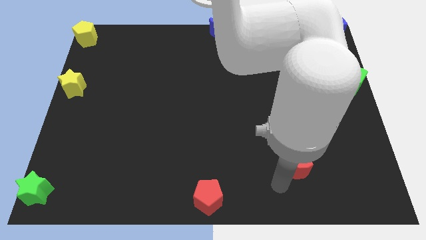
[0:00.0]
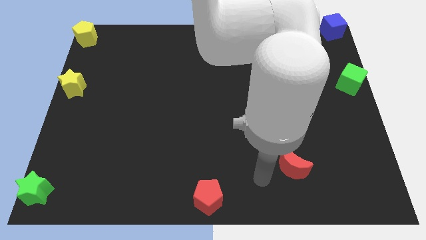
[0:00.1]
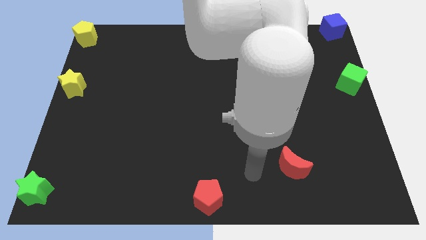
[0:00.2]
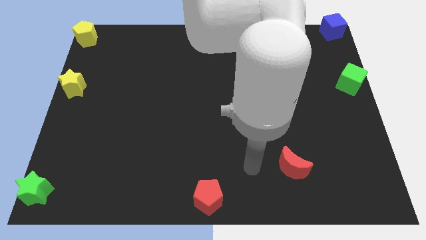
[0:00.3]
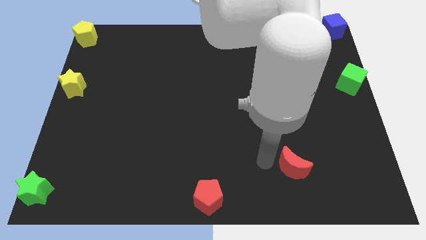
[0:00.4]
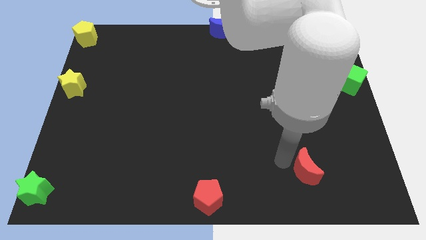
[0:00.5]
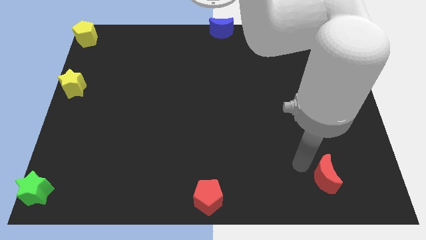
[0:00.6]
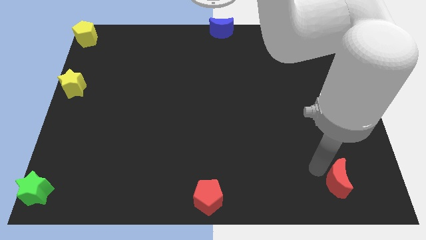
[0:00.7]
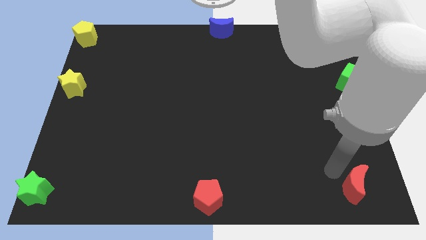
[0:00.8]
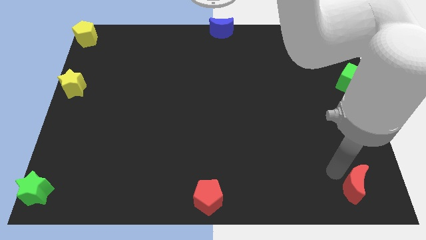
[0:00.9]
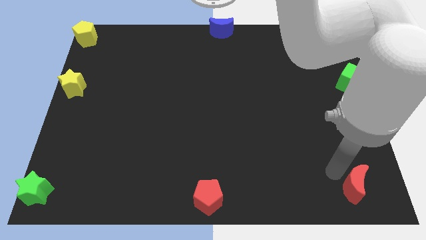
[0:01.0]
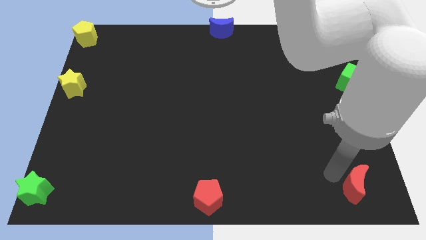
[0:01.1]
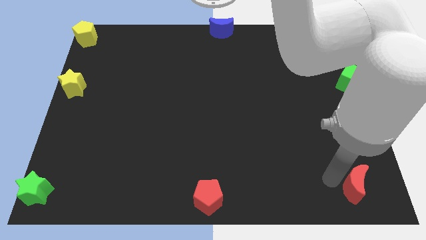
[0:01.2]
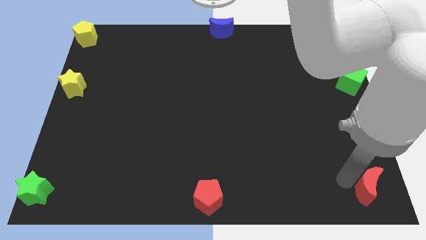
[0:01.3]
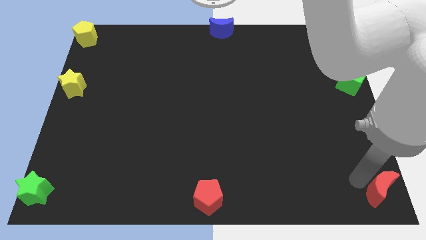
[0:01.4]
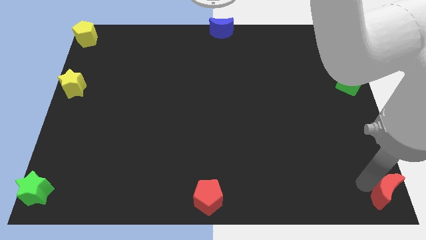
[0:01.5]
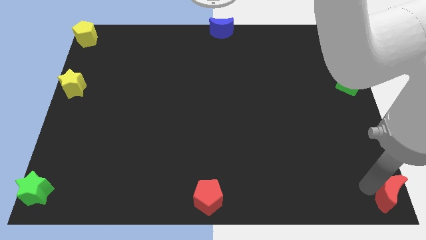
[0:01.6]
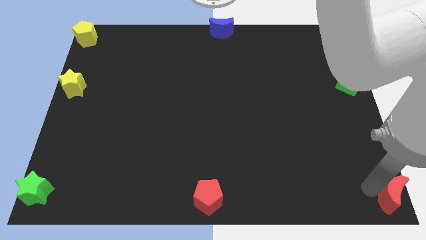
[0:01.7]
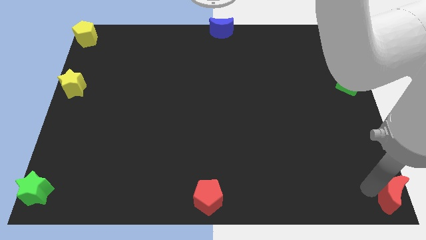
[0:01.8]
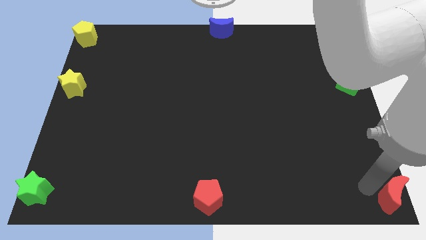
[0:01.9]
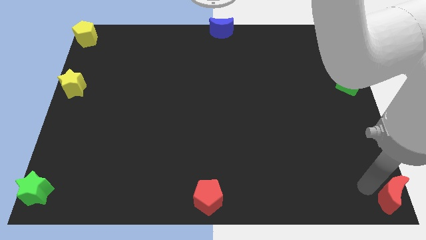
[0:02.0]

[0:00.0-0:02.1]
push the red moon to the bottom right corner

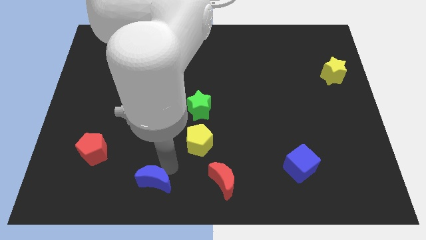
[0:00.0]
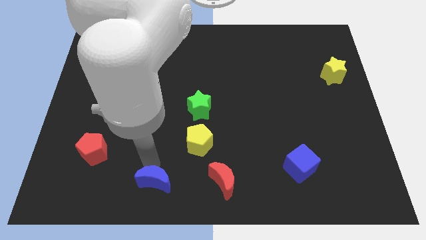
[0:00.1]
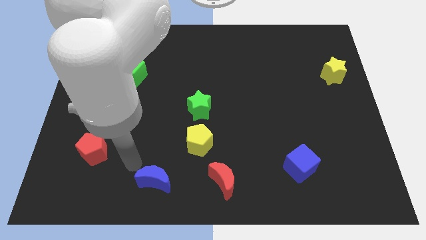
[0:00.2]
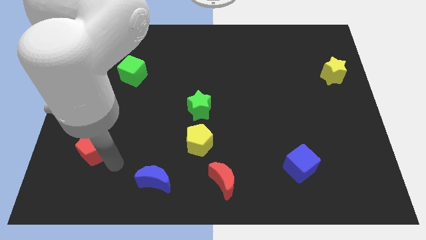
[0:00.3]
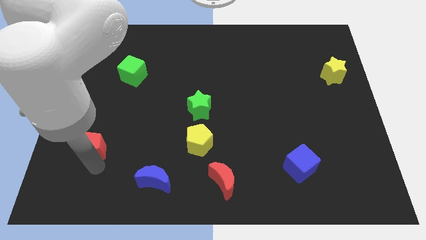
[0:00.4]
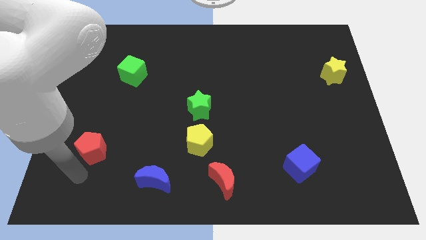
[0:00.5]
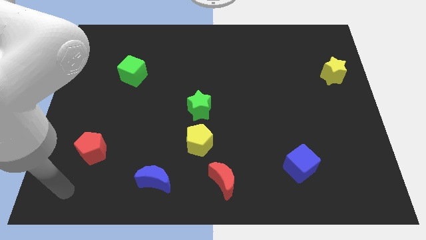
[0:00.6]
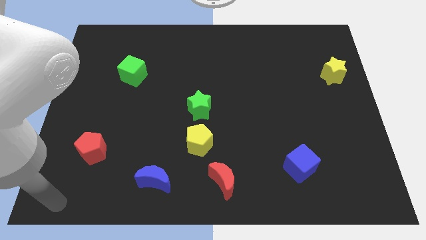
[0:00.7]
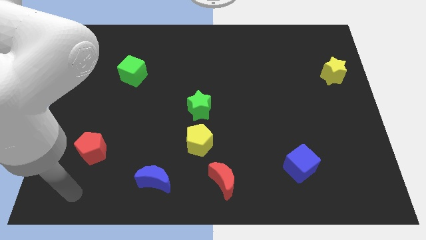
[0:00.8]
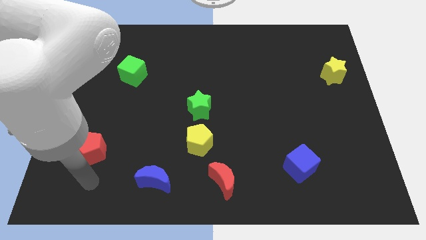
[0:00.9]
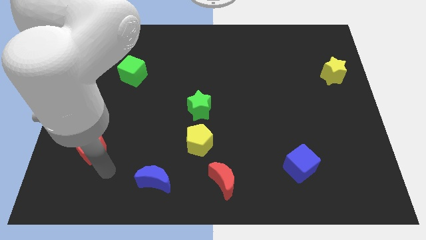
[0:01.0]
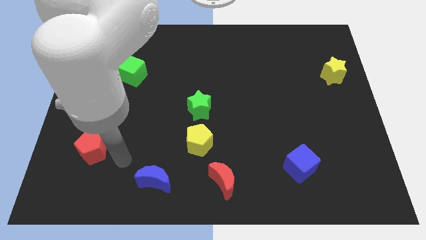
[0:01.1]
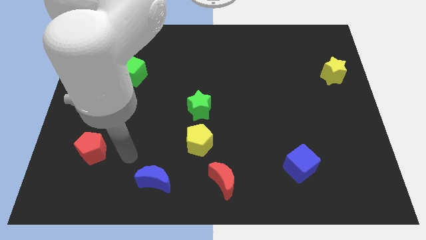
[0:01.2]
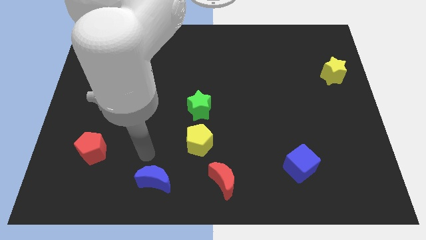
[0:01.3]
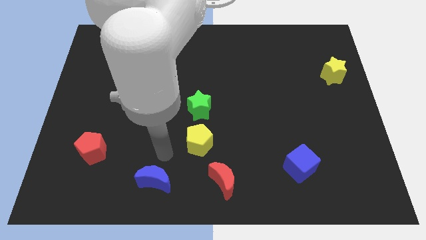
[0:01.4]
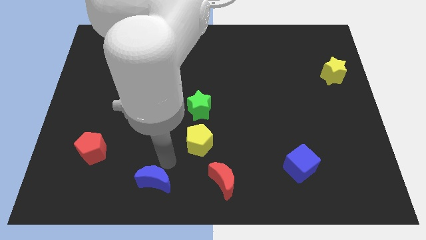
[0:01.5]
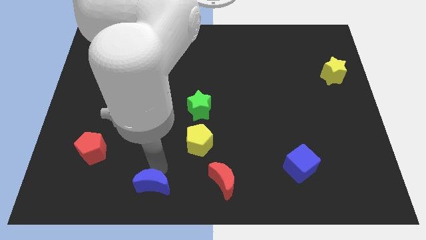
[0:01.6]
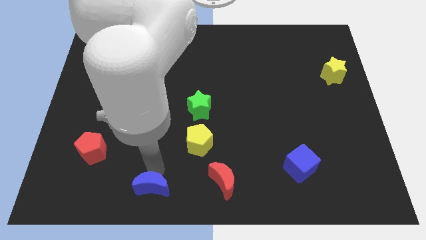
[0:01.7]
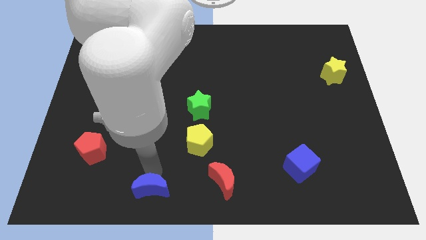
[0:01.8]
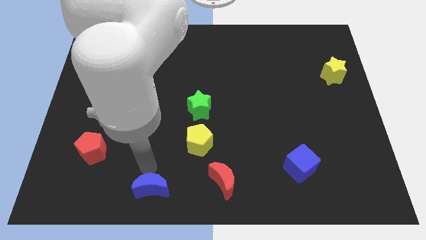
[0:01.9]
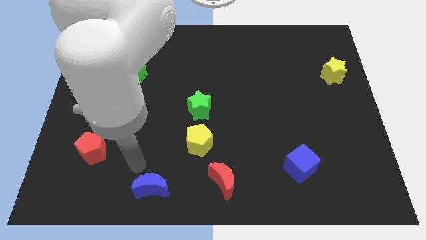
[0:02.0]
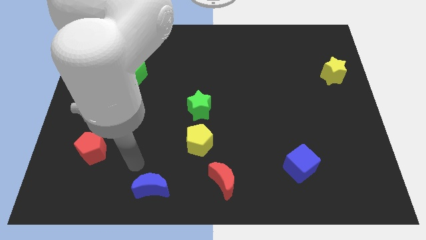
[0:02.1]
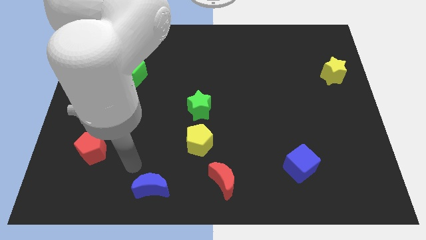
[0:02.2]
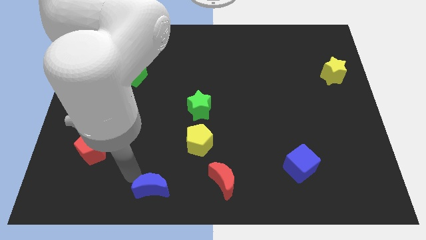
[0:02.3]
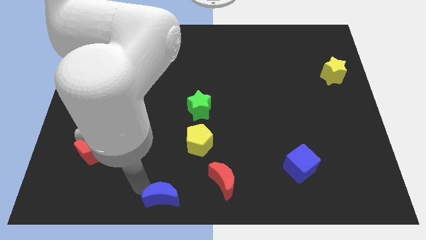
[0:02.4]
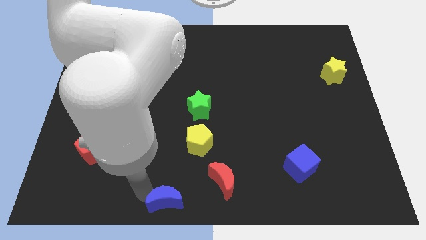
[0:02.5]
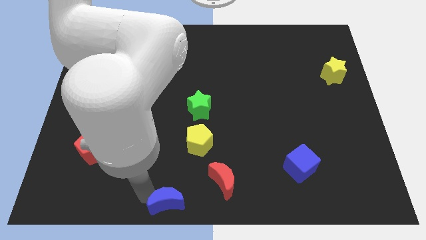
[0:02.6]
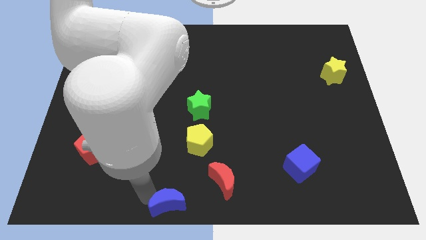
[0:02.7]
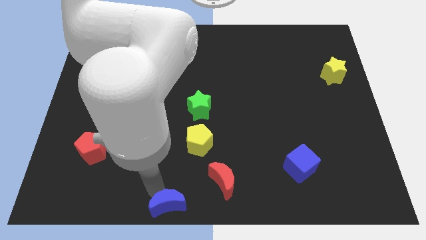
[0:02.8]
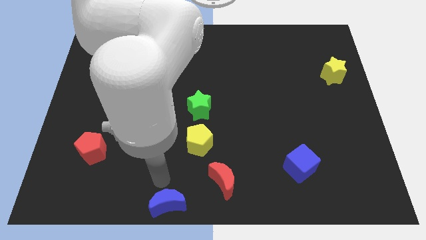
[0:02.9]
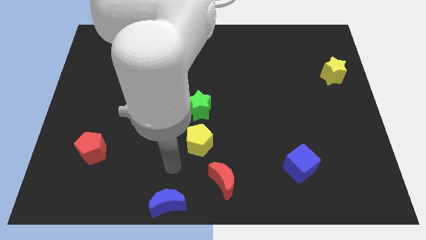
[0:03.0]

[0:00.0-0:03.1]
push the blue crescent towards the bottom of the board

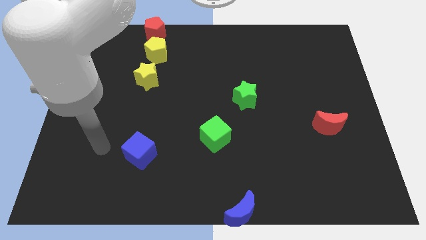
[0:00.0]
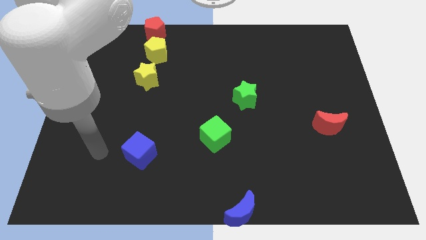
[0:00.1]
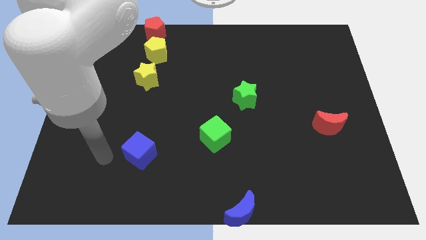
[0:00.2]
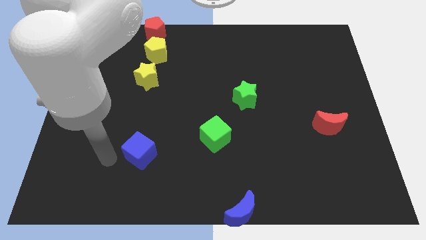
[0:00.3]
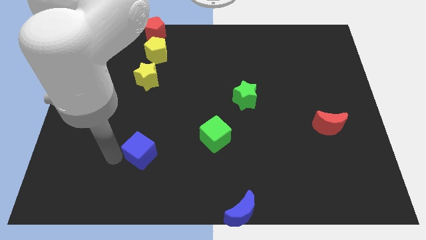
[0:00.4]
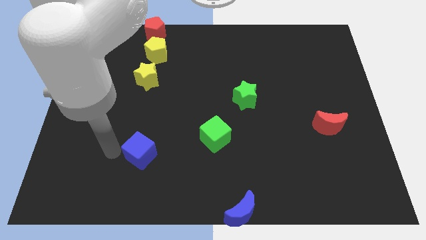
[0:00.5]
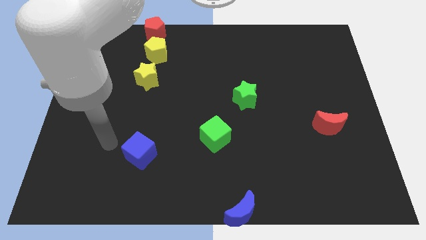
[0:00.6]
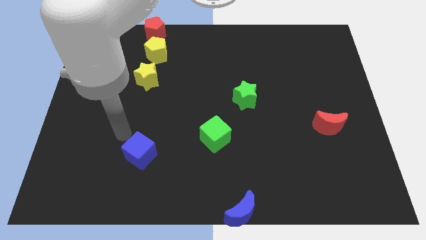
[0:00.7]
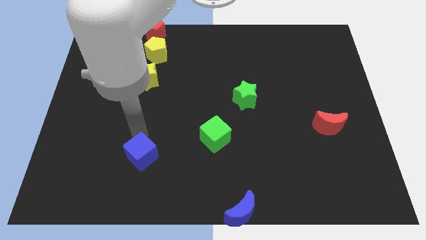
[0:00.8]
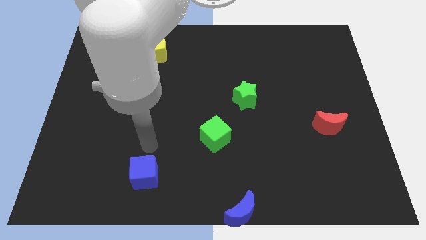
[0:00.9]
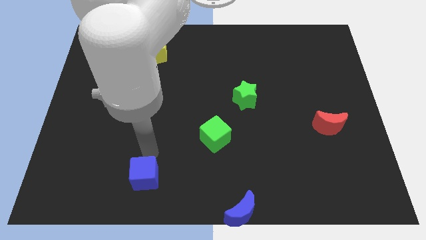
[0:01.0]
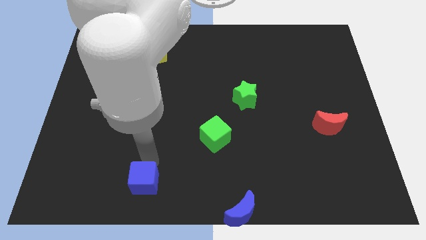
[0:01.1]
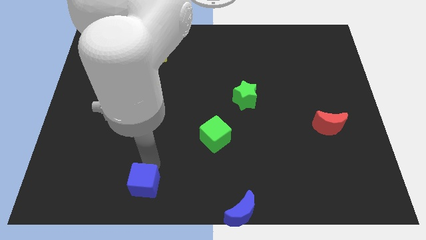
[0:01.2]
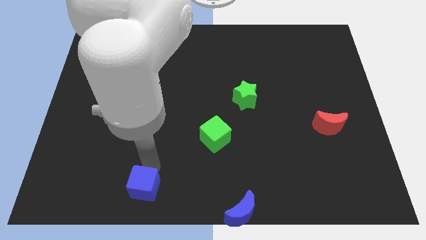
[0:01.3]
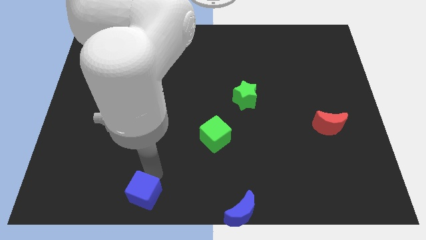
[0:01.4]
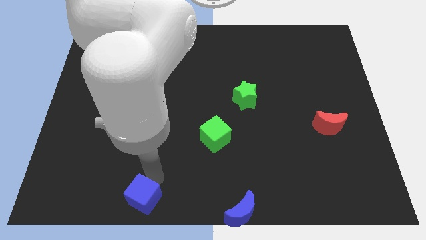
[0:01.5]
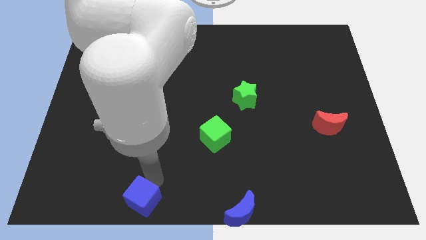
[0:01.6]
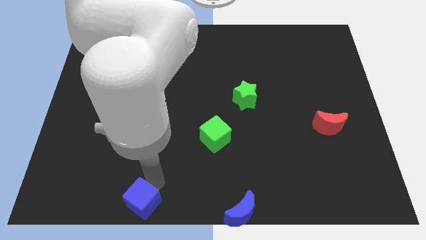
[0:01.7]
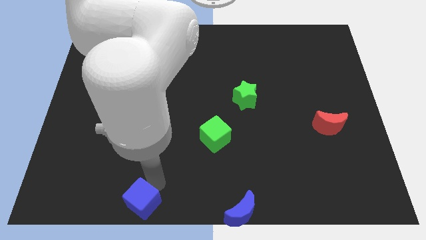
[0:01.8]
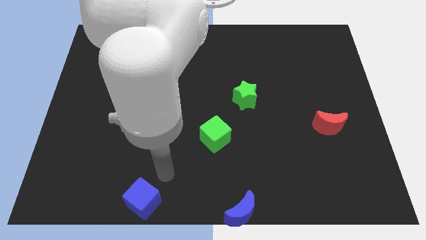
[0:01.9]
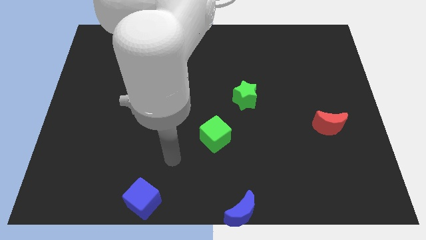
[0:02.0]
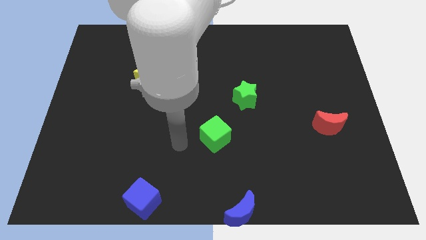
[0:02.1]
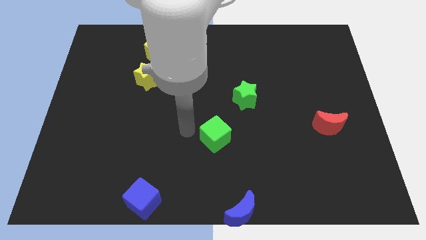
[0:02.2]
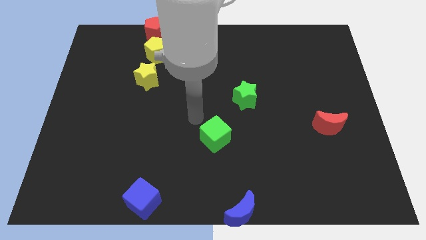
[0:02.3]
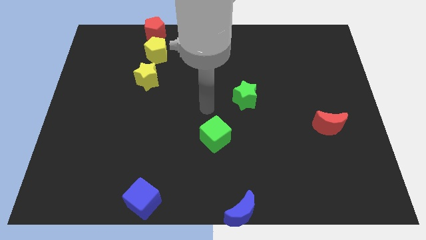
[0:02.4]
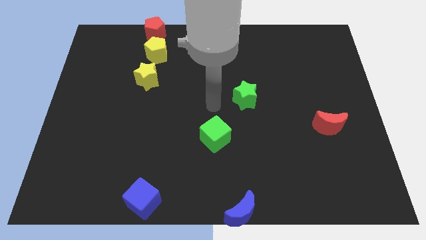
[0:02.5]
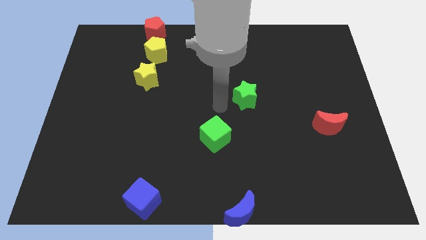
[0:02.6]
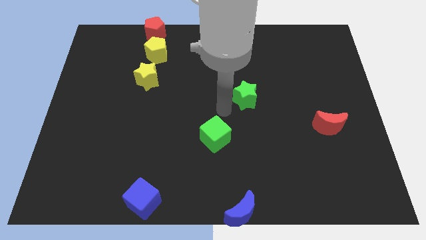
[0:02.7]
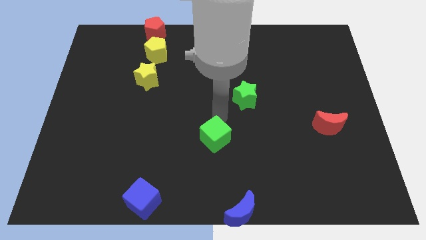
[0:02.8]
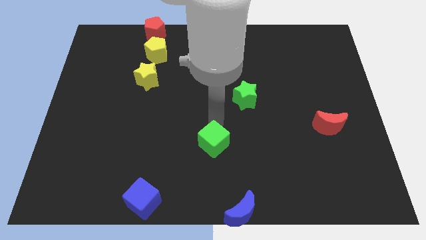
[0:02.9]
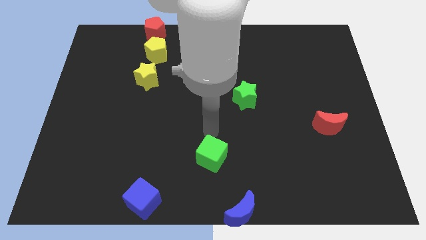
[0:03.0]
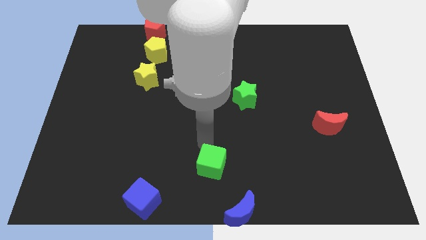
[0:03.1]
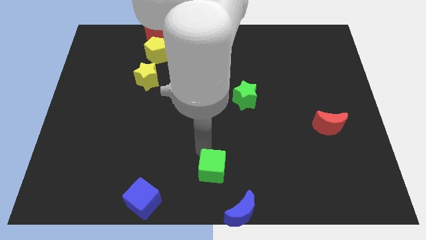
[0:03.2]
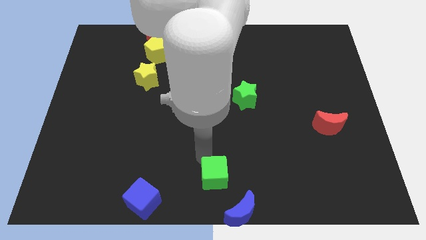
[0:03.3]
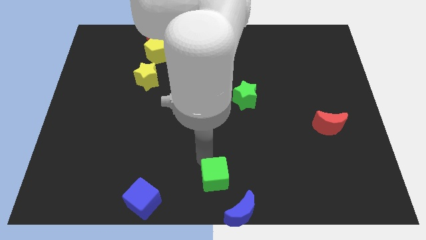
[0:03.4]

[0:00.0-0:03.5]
push the blue cube to the left of blue moon and green cube towards blue crescent

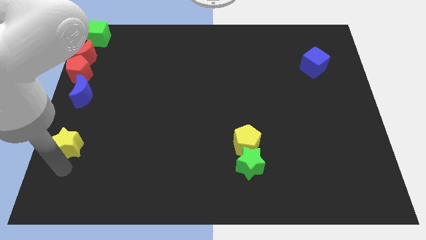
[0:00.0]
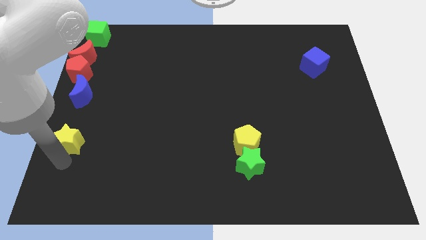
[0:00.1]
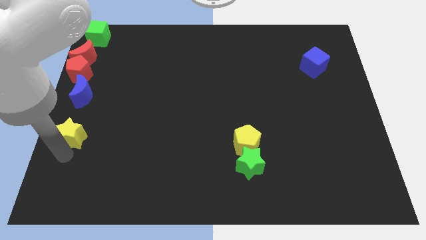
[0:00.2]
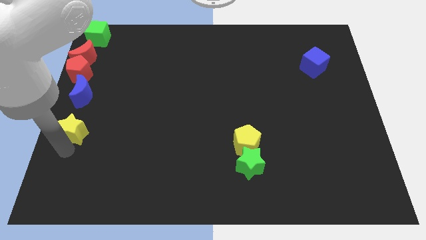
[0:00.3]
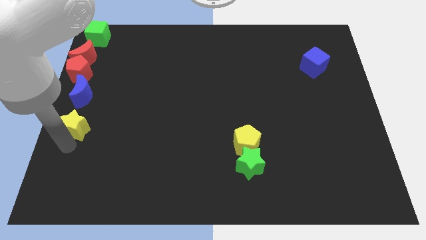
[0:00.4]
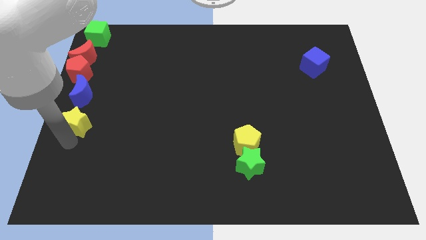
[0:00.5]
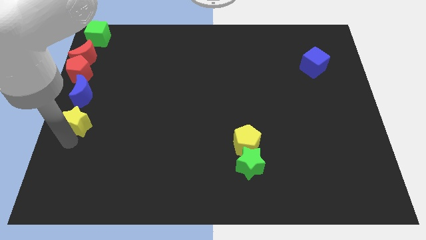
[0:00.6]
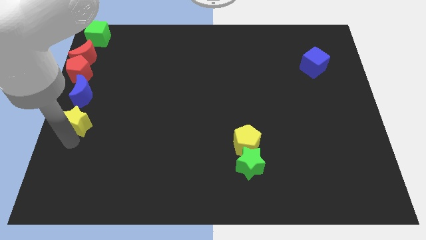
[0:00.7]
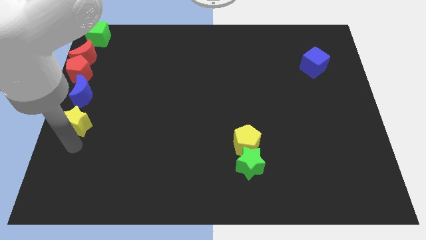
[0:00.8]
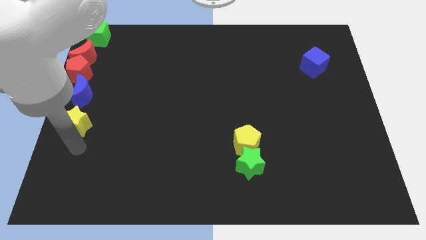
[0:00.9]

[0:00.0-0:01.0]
push the yellow star below the blue crescent
